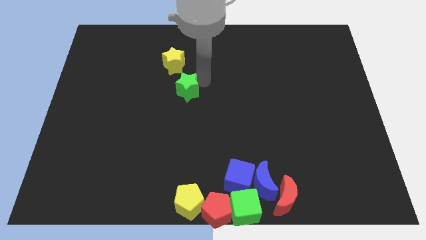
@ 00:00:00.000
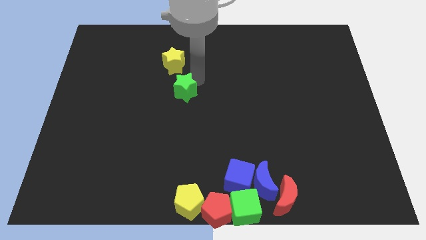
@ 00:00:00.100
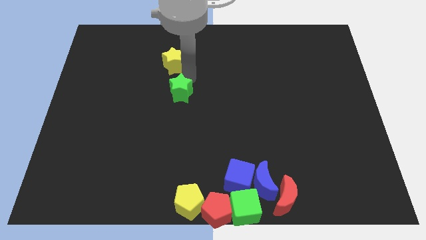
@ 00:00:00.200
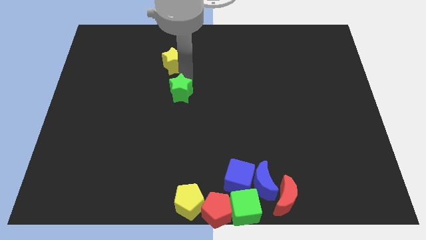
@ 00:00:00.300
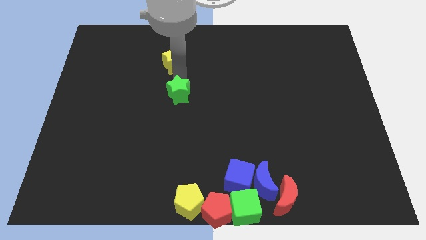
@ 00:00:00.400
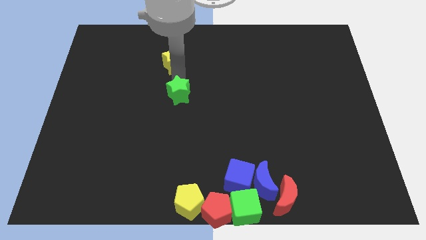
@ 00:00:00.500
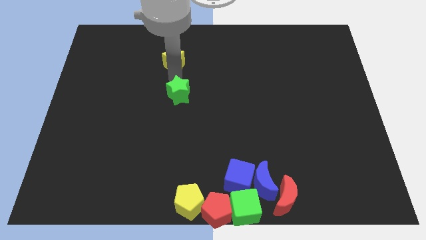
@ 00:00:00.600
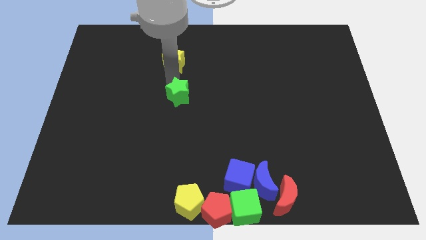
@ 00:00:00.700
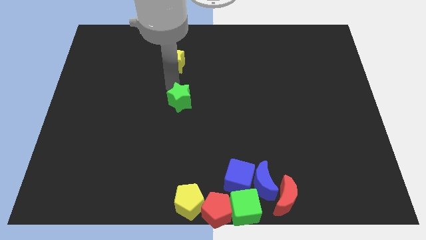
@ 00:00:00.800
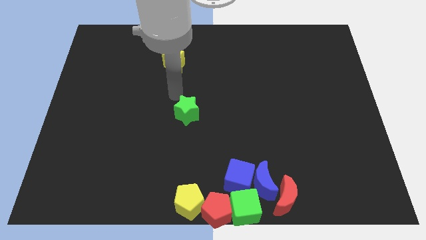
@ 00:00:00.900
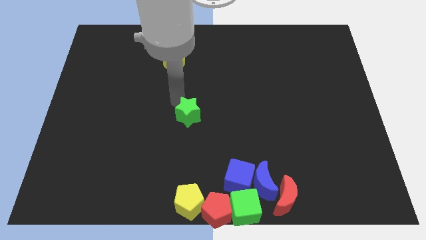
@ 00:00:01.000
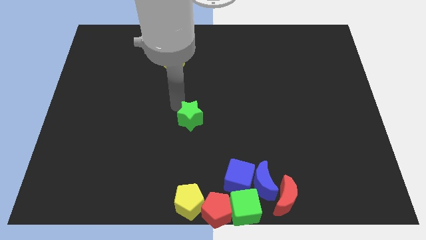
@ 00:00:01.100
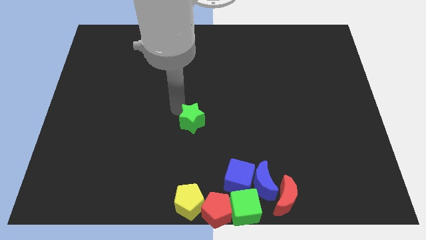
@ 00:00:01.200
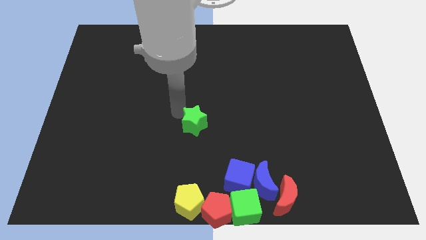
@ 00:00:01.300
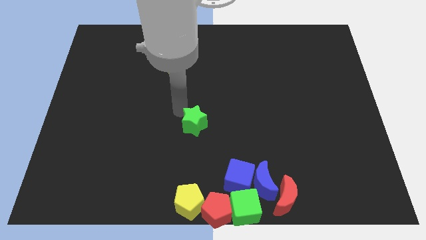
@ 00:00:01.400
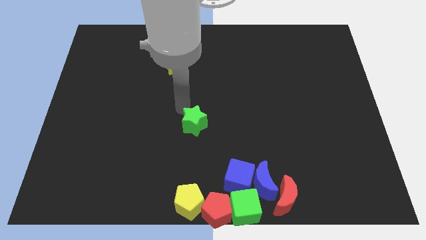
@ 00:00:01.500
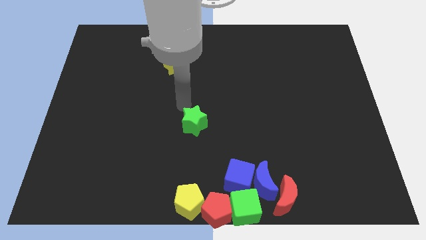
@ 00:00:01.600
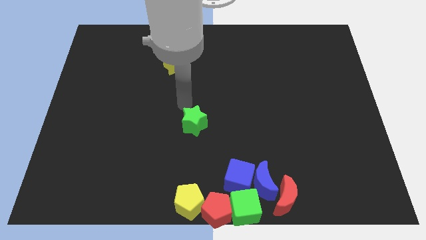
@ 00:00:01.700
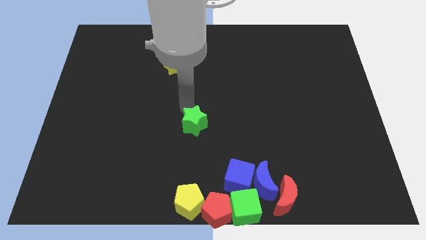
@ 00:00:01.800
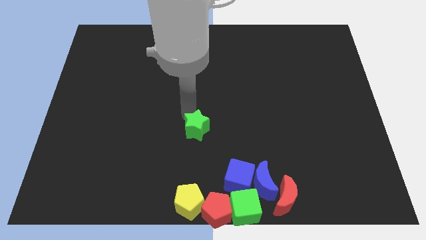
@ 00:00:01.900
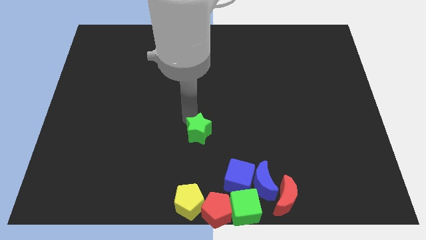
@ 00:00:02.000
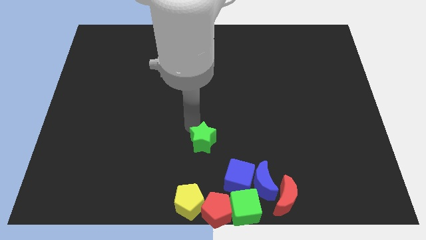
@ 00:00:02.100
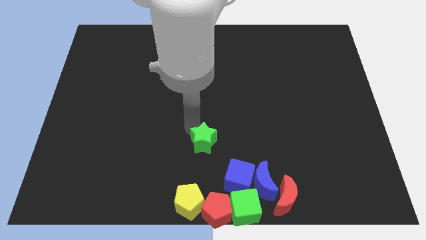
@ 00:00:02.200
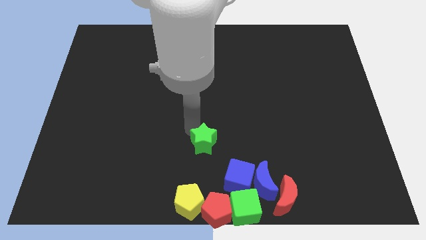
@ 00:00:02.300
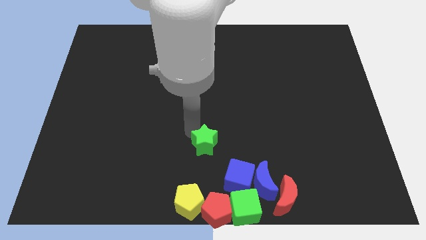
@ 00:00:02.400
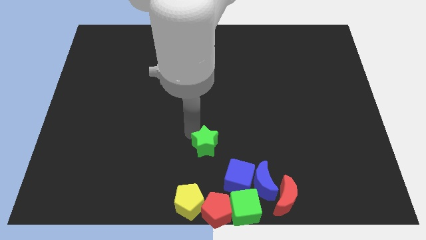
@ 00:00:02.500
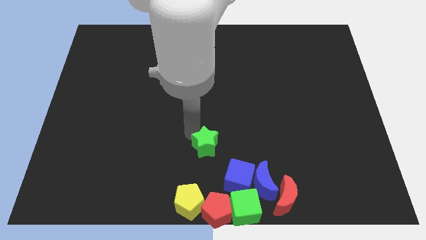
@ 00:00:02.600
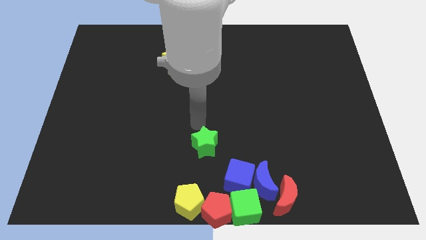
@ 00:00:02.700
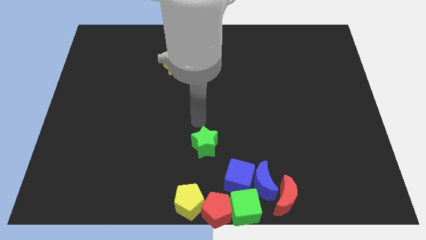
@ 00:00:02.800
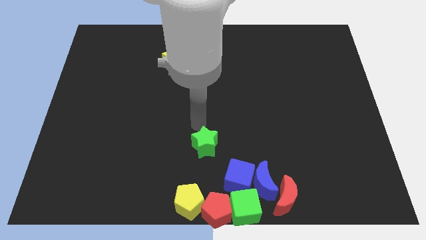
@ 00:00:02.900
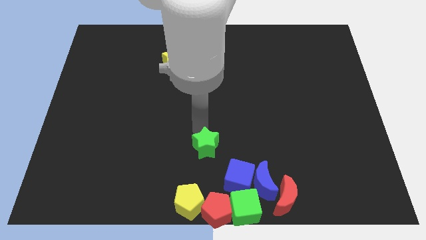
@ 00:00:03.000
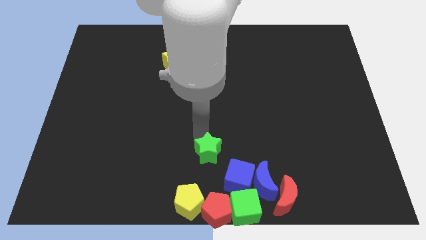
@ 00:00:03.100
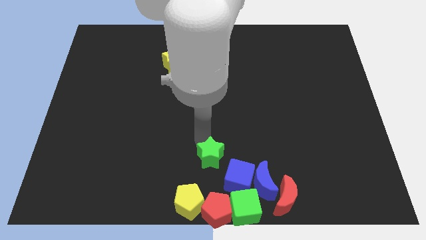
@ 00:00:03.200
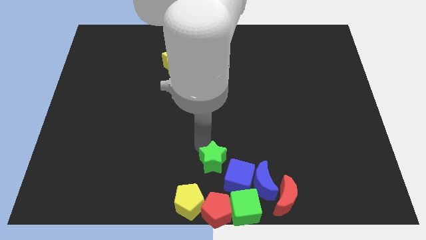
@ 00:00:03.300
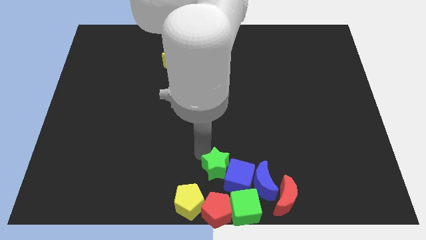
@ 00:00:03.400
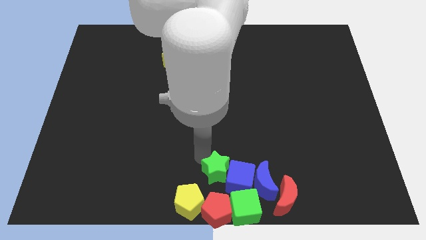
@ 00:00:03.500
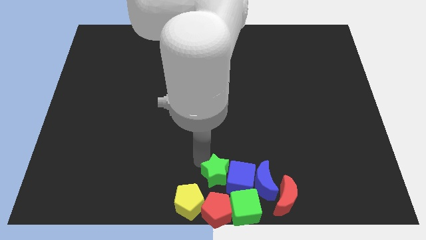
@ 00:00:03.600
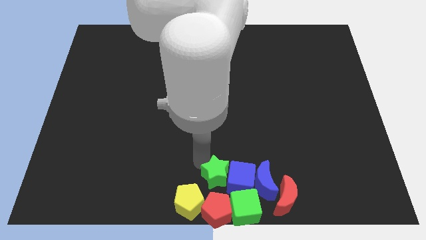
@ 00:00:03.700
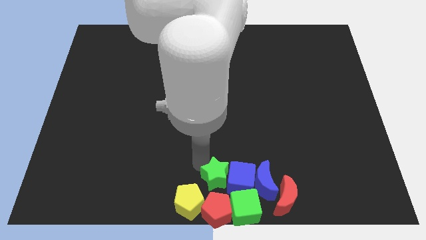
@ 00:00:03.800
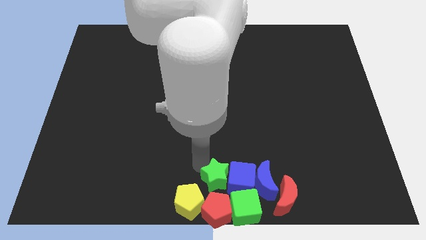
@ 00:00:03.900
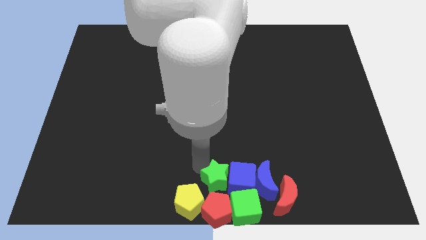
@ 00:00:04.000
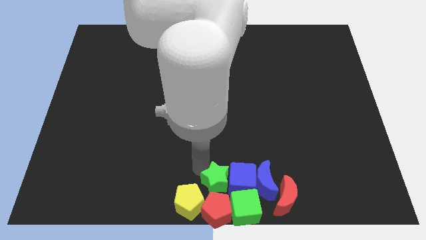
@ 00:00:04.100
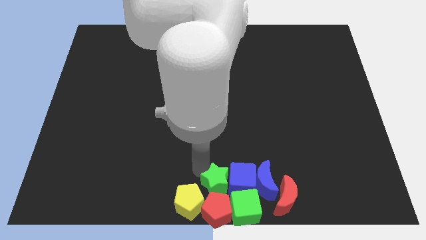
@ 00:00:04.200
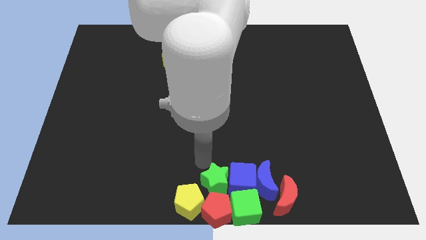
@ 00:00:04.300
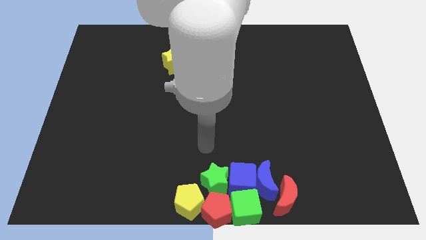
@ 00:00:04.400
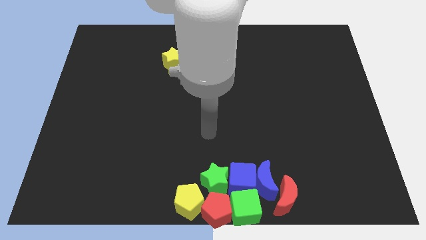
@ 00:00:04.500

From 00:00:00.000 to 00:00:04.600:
place the green star on top of red pentagon

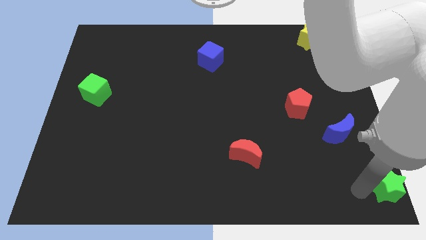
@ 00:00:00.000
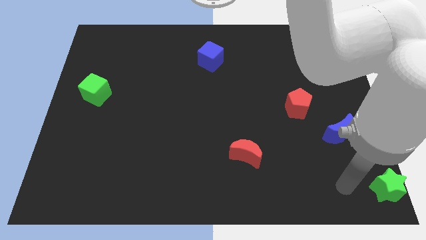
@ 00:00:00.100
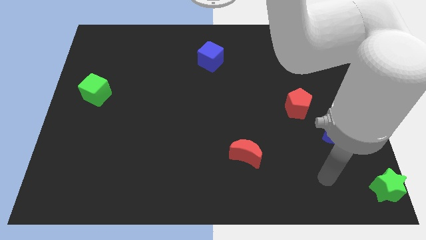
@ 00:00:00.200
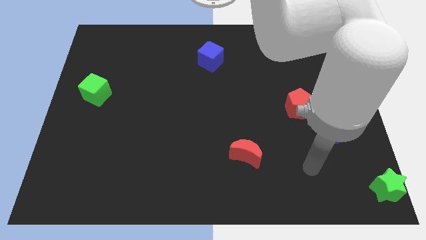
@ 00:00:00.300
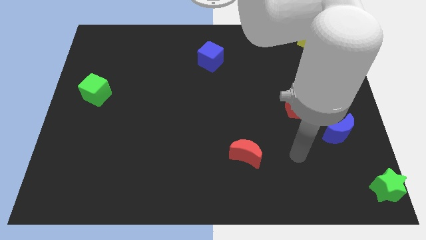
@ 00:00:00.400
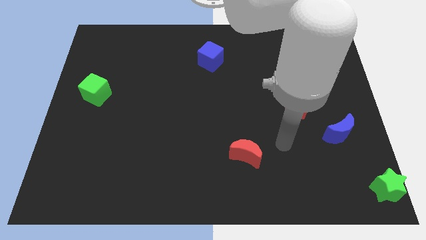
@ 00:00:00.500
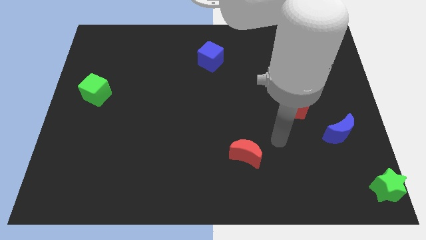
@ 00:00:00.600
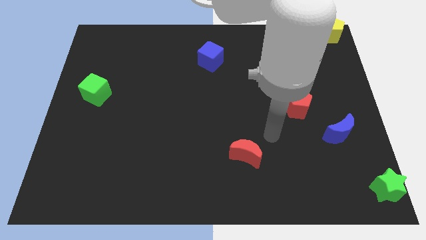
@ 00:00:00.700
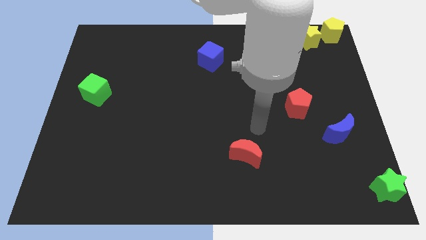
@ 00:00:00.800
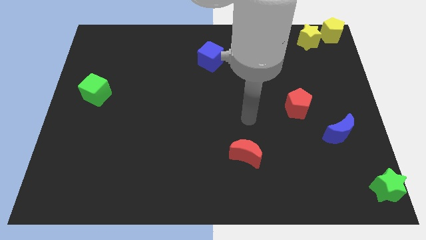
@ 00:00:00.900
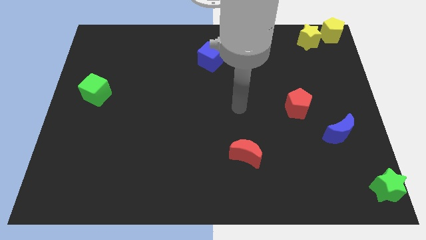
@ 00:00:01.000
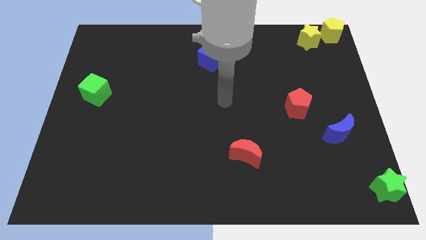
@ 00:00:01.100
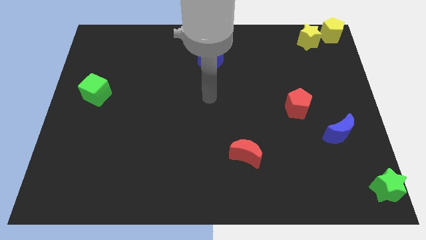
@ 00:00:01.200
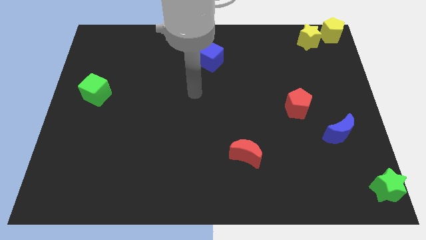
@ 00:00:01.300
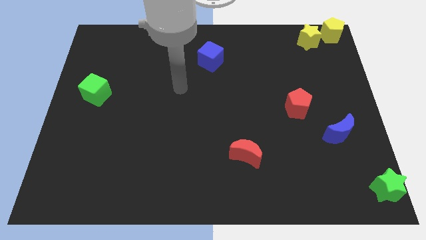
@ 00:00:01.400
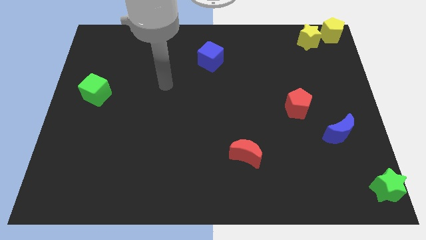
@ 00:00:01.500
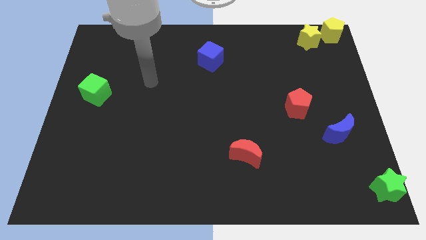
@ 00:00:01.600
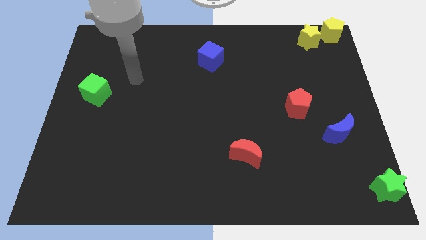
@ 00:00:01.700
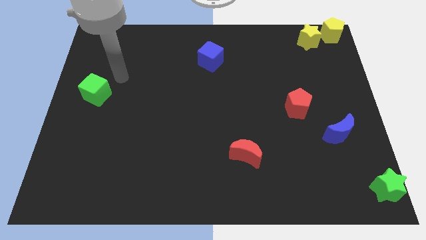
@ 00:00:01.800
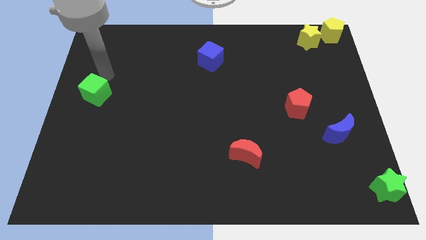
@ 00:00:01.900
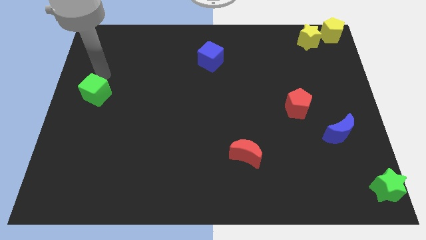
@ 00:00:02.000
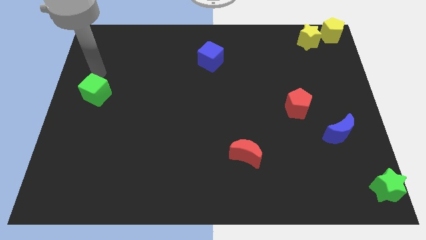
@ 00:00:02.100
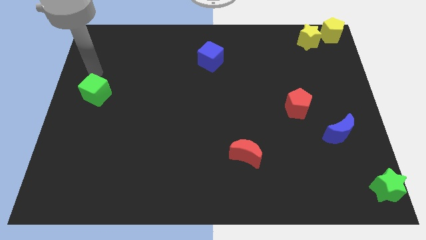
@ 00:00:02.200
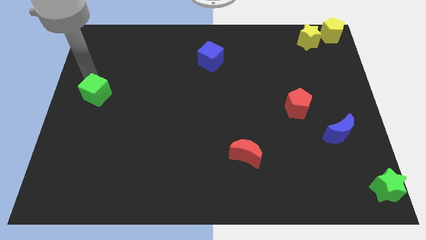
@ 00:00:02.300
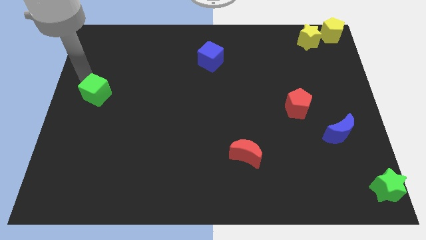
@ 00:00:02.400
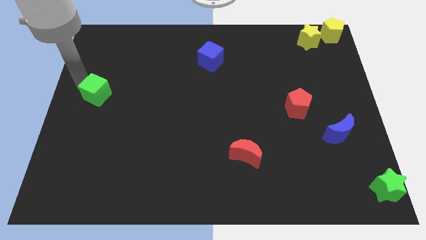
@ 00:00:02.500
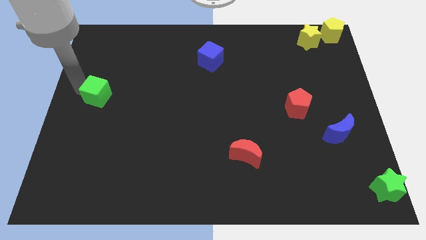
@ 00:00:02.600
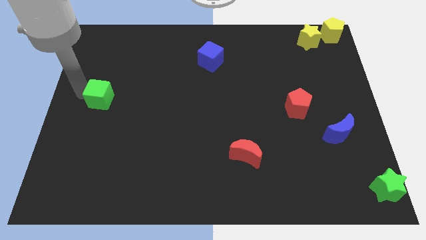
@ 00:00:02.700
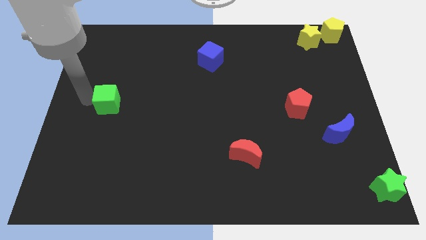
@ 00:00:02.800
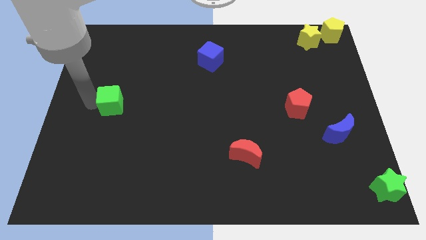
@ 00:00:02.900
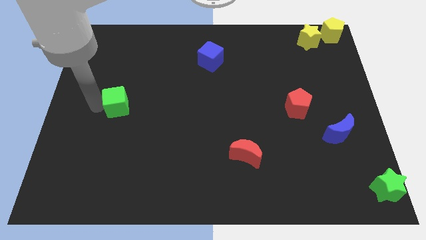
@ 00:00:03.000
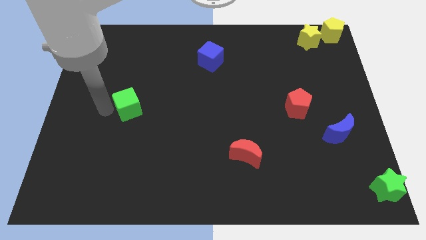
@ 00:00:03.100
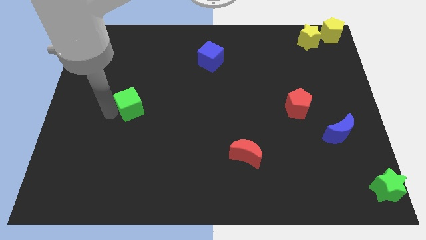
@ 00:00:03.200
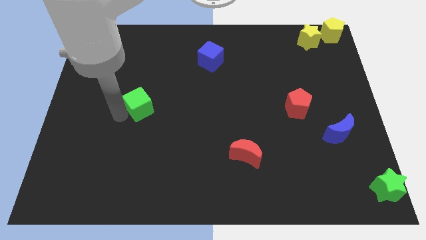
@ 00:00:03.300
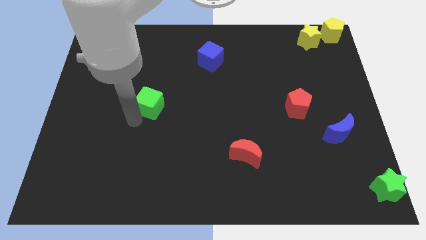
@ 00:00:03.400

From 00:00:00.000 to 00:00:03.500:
push the green cube towards the center of the board

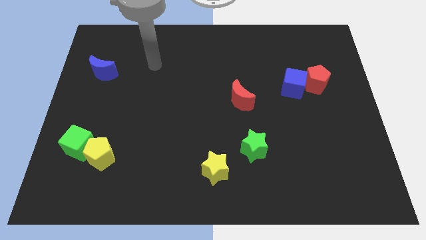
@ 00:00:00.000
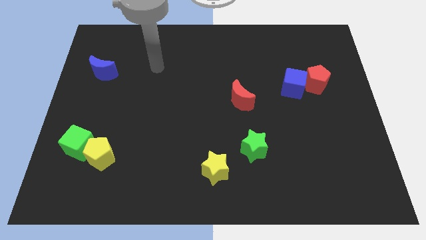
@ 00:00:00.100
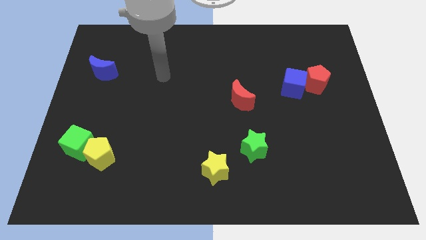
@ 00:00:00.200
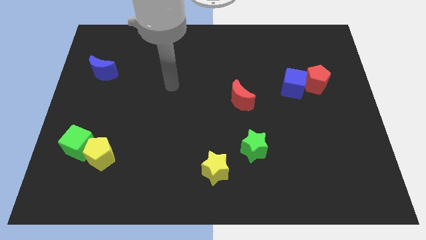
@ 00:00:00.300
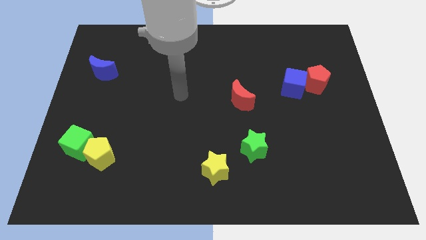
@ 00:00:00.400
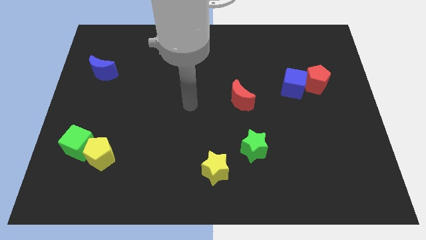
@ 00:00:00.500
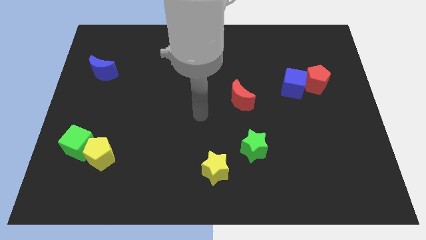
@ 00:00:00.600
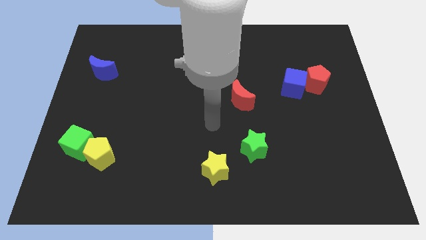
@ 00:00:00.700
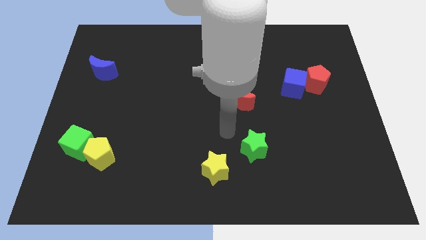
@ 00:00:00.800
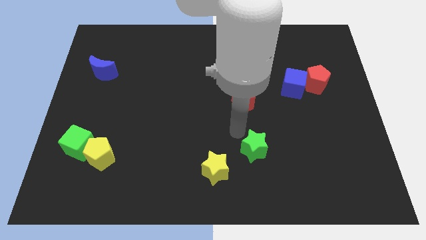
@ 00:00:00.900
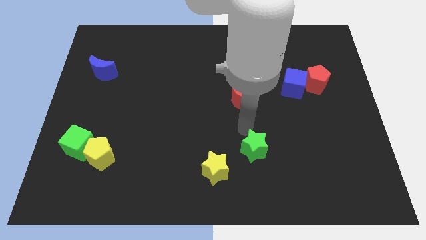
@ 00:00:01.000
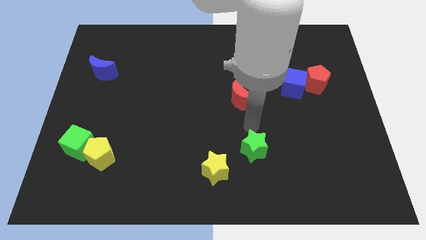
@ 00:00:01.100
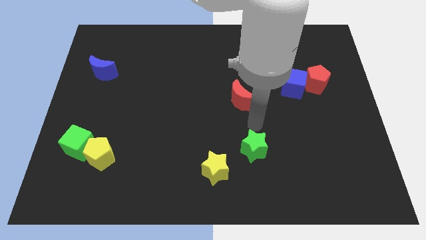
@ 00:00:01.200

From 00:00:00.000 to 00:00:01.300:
point your arm at the top of the green star
